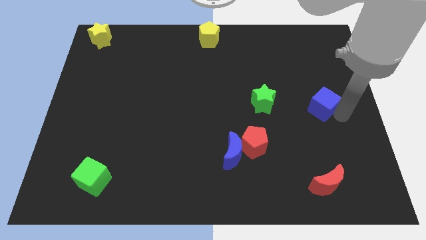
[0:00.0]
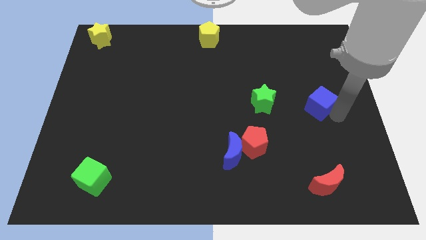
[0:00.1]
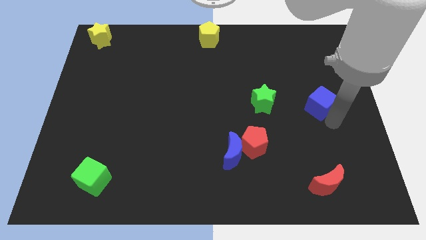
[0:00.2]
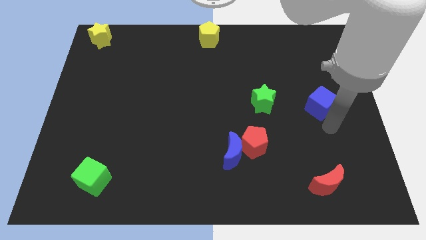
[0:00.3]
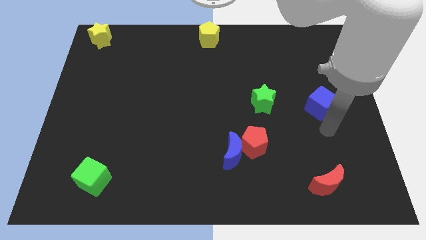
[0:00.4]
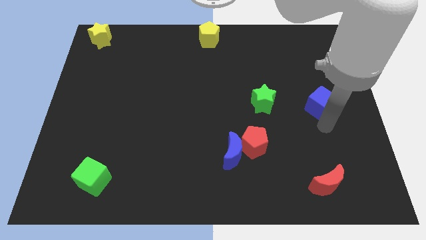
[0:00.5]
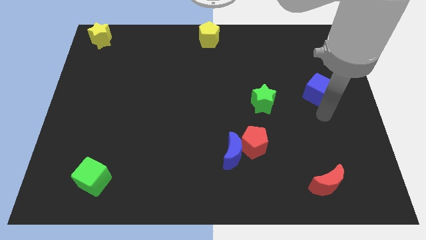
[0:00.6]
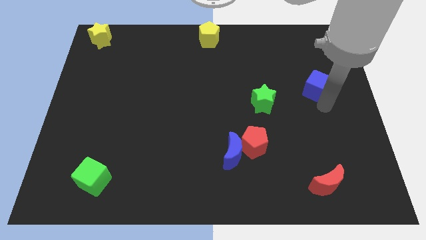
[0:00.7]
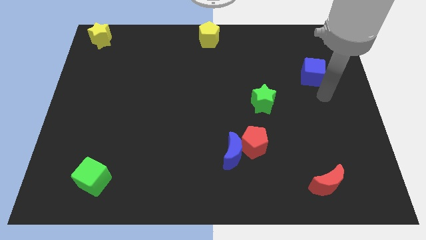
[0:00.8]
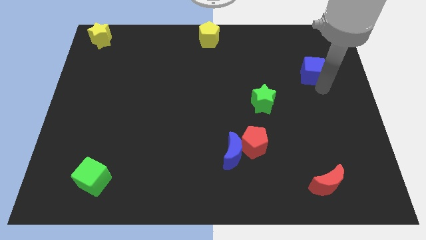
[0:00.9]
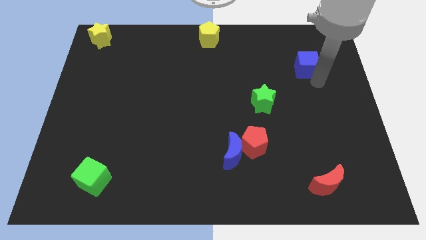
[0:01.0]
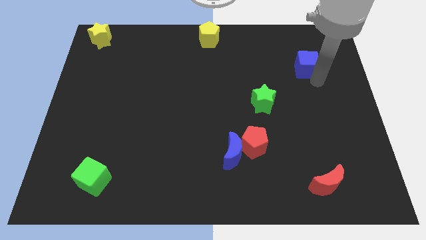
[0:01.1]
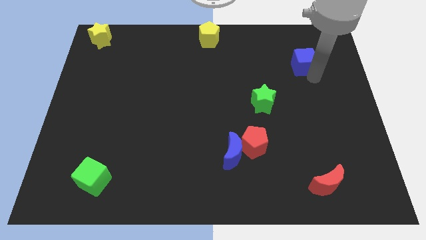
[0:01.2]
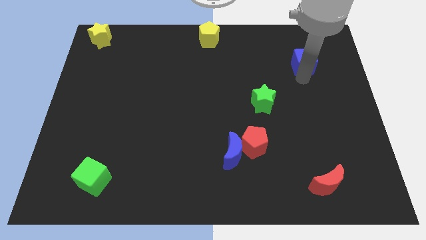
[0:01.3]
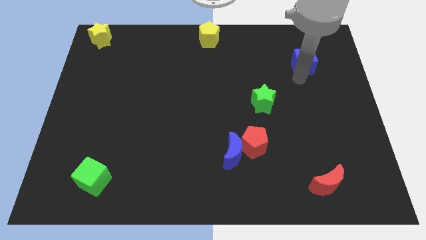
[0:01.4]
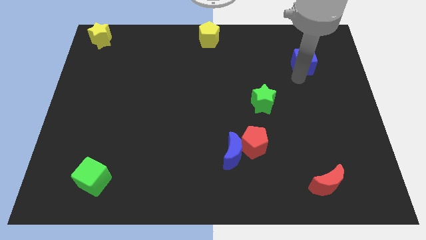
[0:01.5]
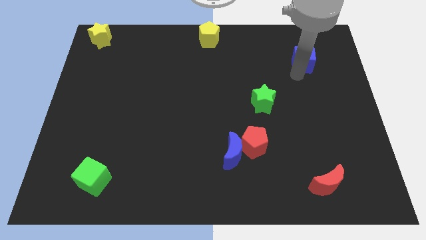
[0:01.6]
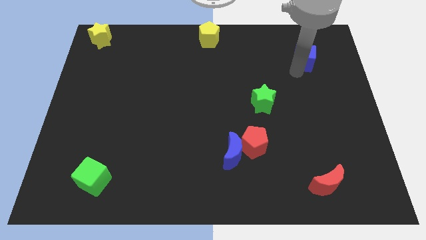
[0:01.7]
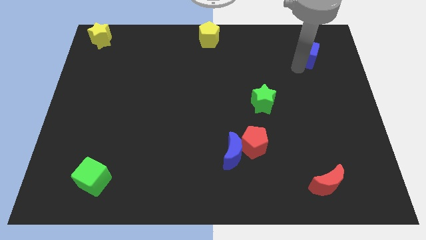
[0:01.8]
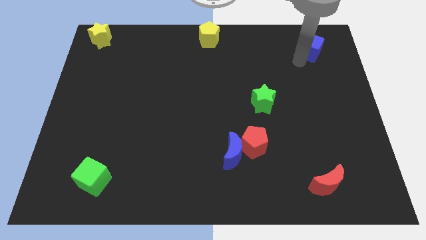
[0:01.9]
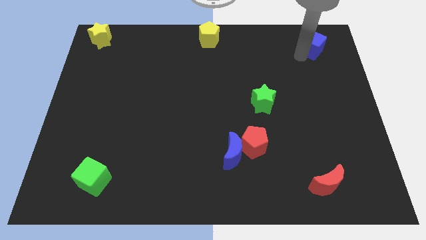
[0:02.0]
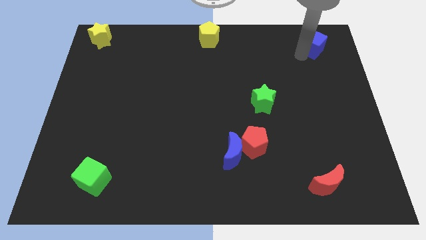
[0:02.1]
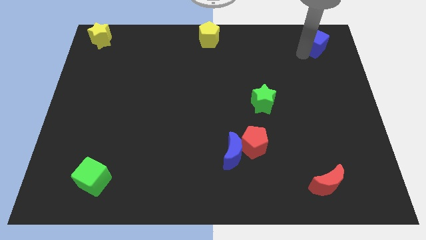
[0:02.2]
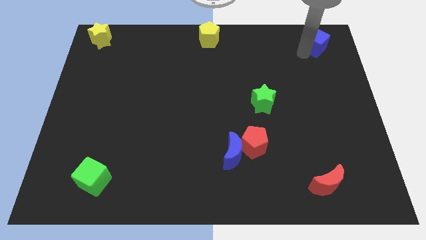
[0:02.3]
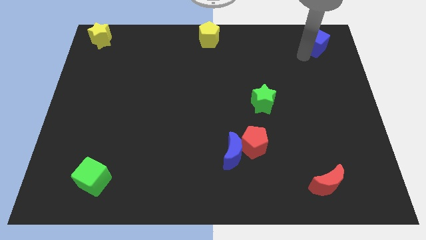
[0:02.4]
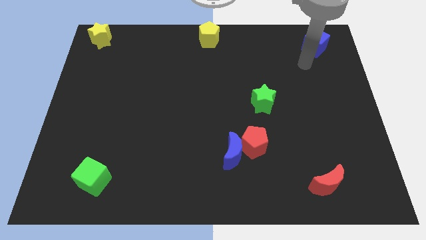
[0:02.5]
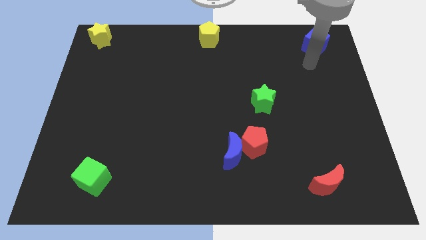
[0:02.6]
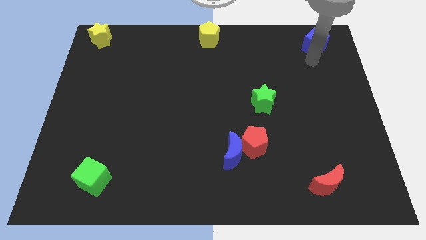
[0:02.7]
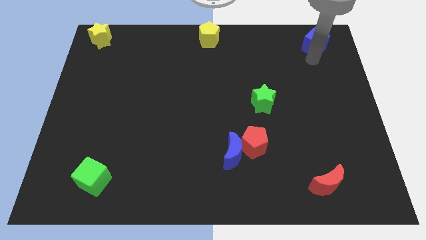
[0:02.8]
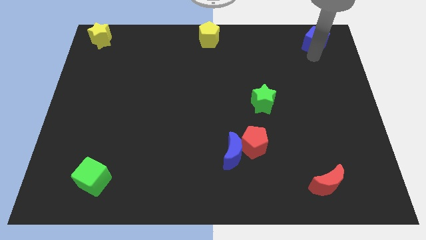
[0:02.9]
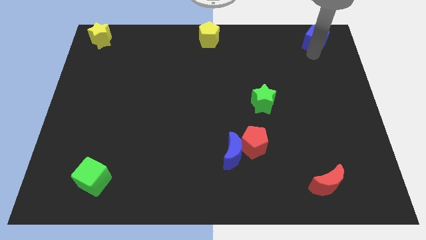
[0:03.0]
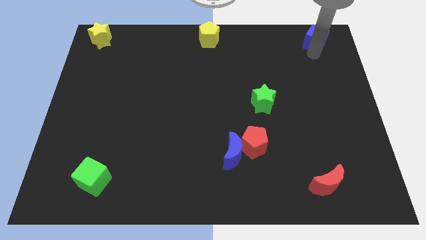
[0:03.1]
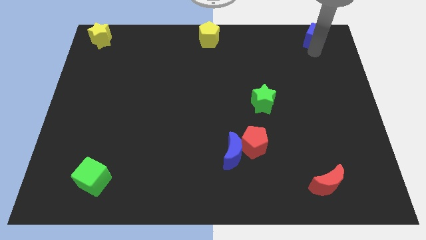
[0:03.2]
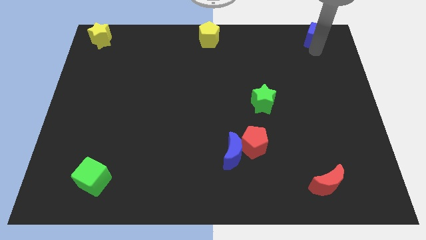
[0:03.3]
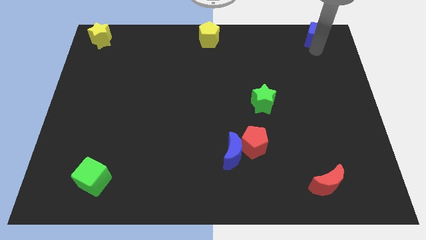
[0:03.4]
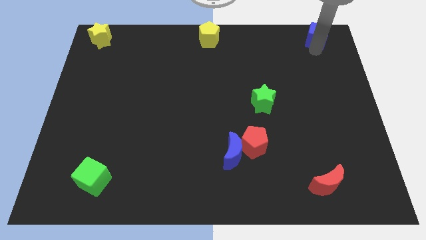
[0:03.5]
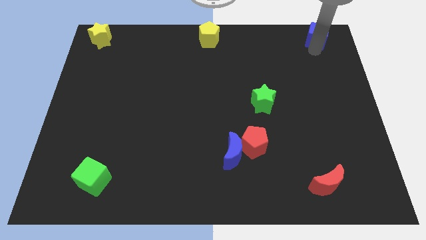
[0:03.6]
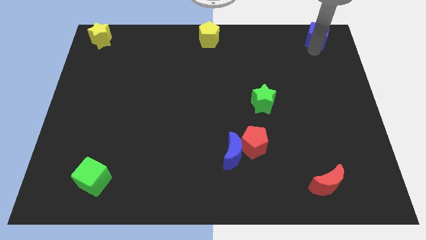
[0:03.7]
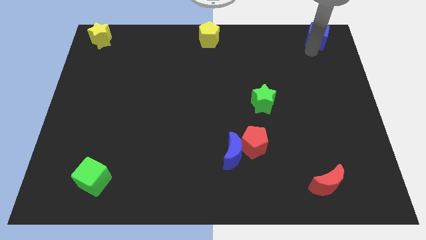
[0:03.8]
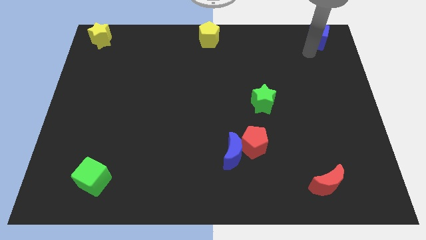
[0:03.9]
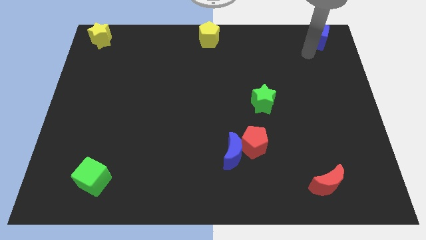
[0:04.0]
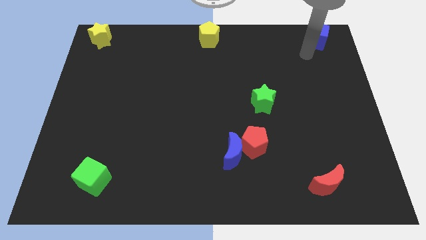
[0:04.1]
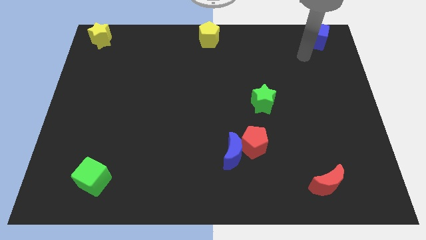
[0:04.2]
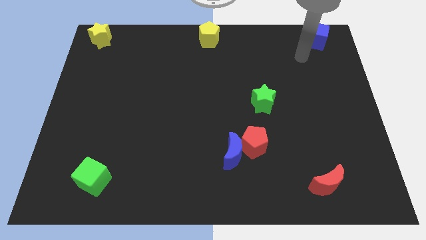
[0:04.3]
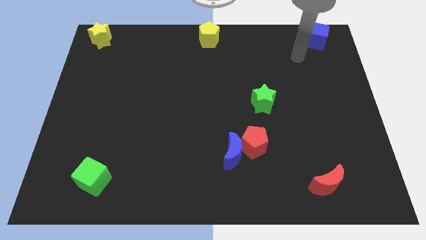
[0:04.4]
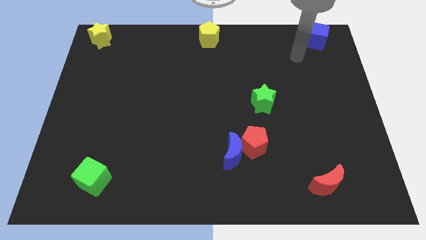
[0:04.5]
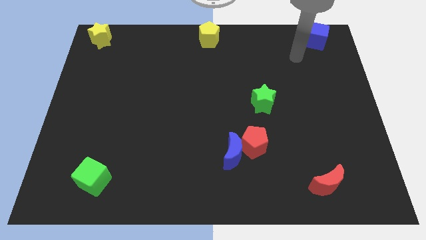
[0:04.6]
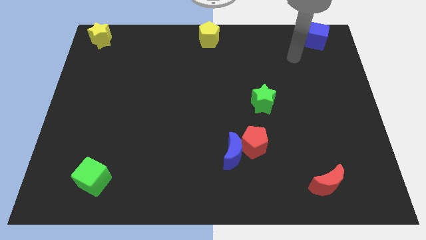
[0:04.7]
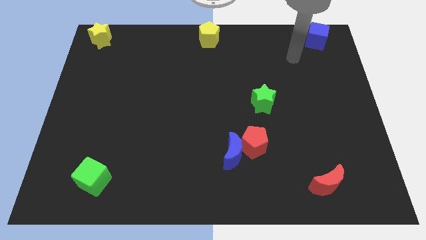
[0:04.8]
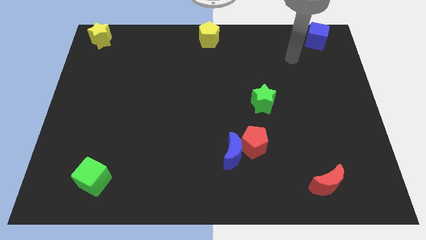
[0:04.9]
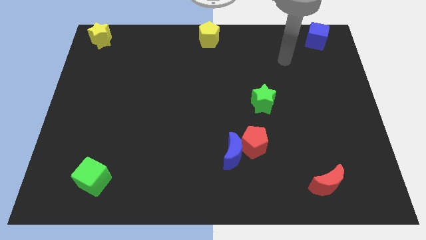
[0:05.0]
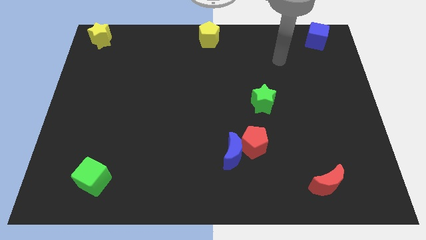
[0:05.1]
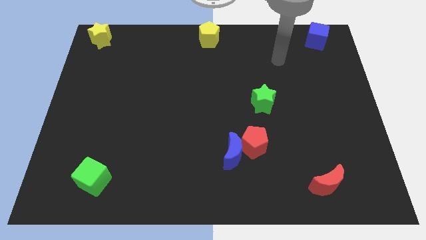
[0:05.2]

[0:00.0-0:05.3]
push the blue cube to the top right corner of the board

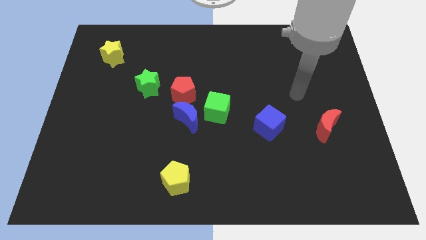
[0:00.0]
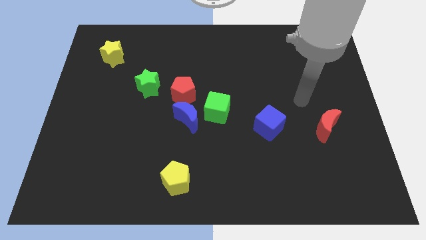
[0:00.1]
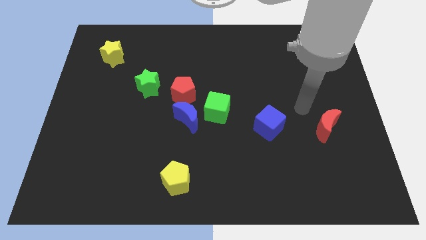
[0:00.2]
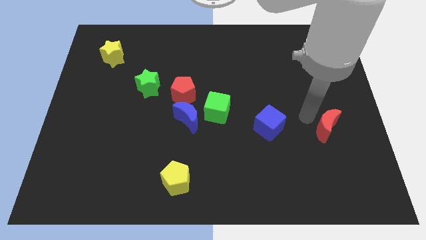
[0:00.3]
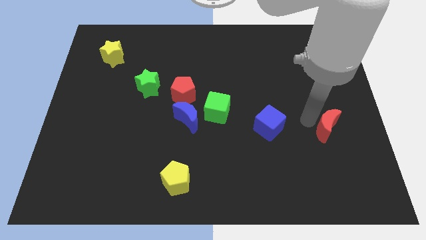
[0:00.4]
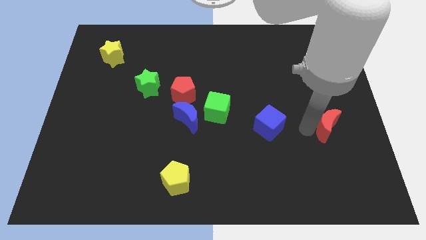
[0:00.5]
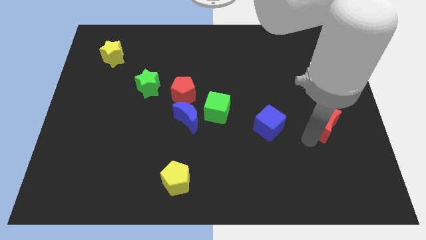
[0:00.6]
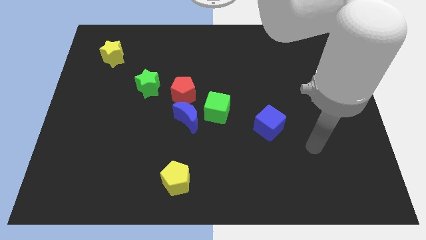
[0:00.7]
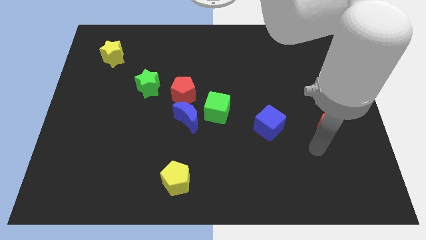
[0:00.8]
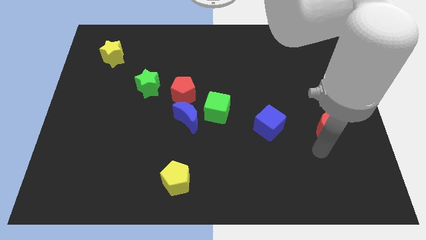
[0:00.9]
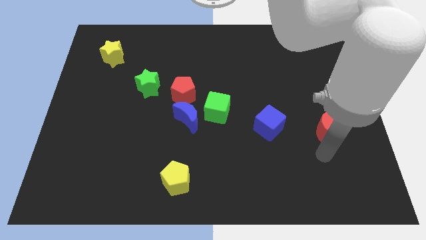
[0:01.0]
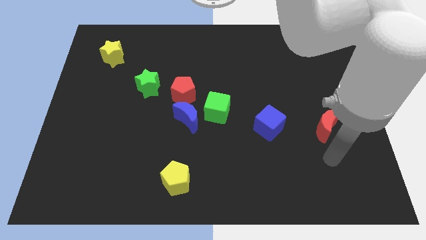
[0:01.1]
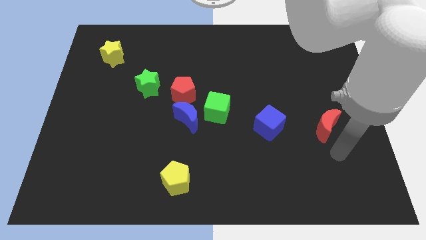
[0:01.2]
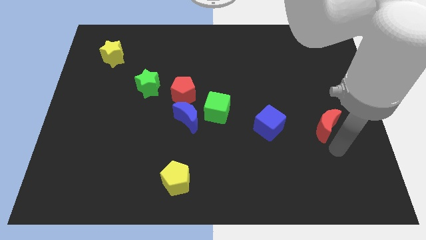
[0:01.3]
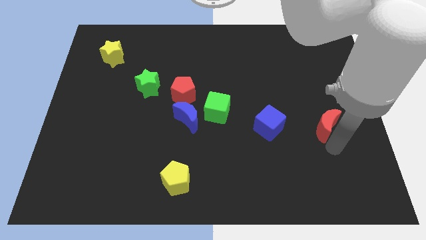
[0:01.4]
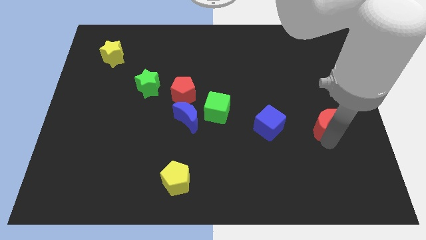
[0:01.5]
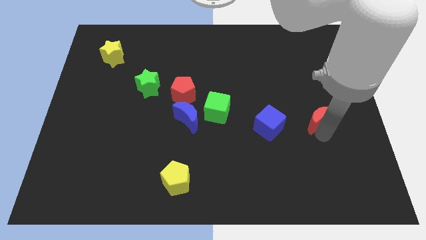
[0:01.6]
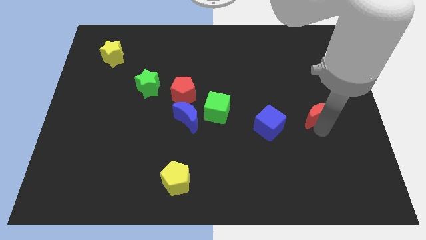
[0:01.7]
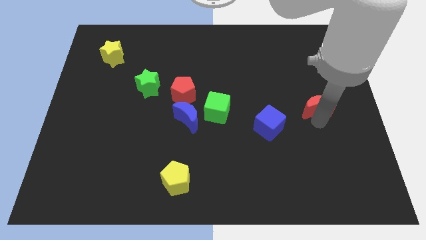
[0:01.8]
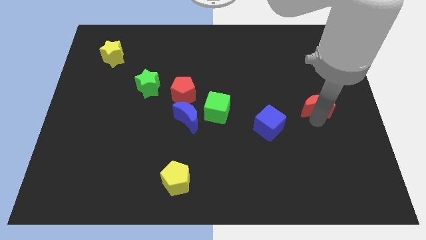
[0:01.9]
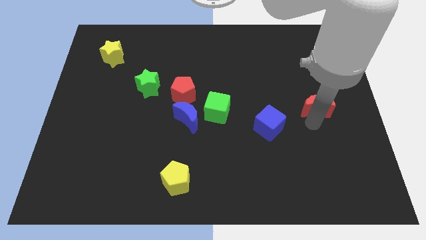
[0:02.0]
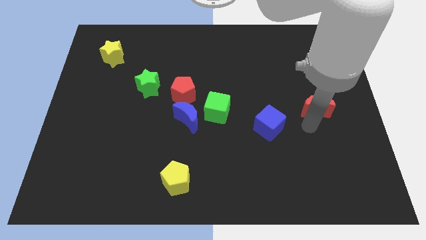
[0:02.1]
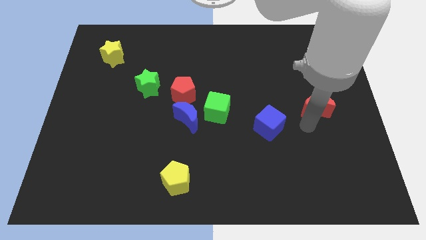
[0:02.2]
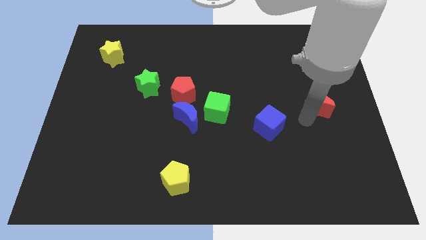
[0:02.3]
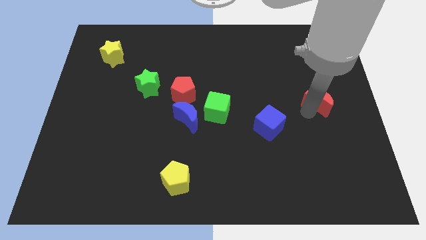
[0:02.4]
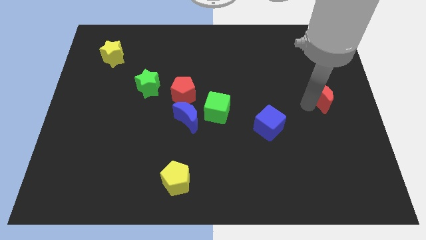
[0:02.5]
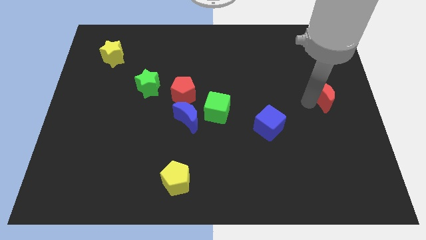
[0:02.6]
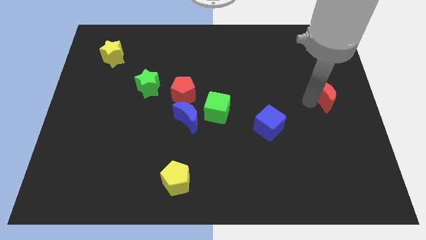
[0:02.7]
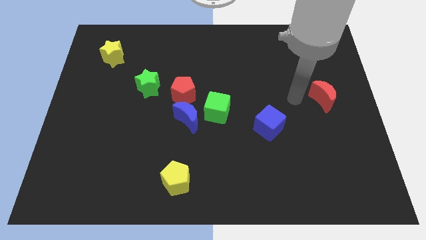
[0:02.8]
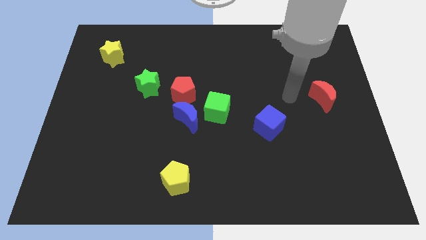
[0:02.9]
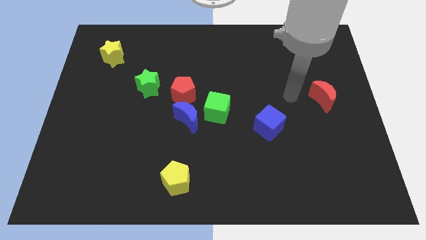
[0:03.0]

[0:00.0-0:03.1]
slide red moon slightly to the right

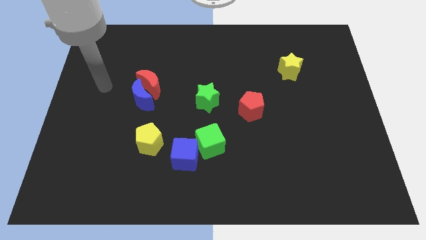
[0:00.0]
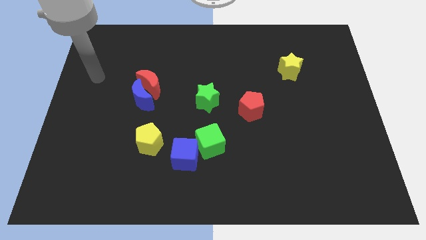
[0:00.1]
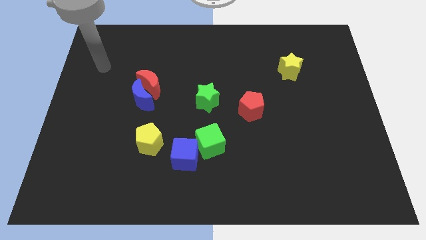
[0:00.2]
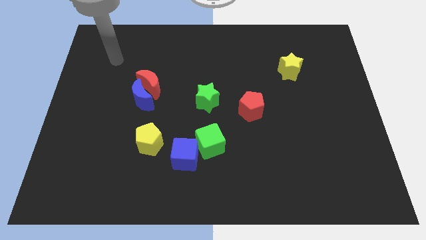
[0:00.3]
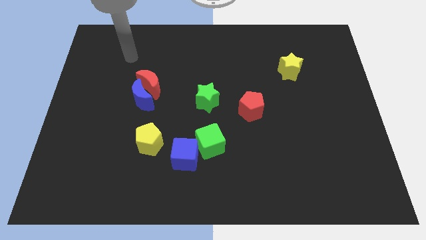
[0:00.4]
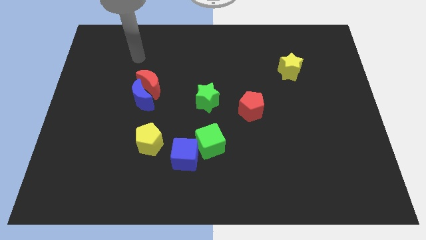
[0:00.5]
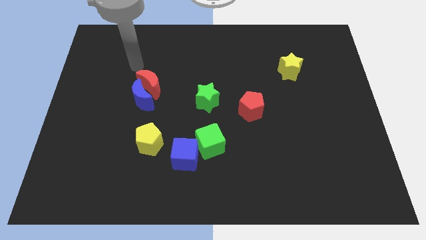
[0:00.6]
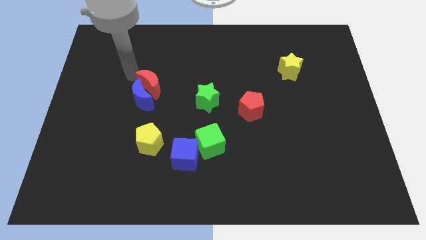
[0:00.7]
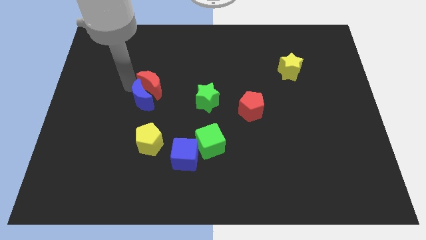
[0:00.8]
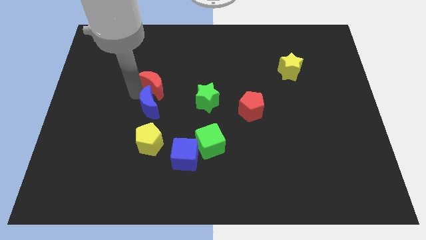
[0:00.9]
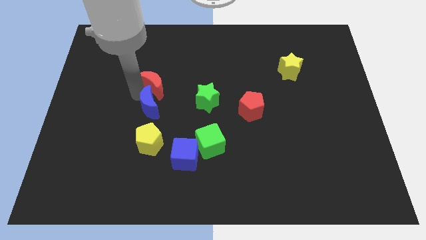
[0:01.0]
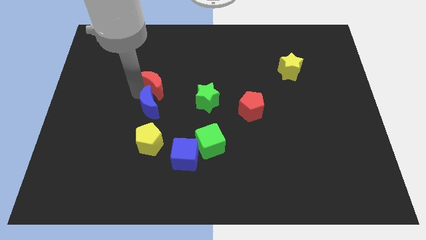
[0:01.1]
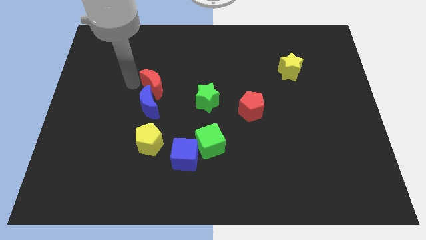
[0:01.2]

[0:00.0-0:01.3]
put the blue moon to the top side of the yellow pentagon
